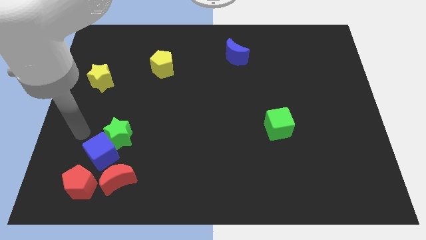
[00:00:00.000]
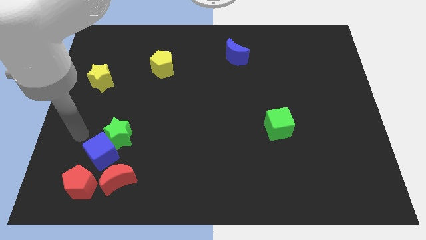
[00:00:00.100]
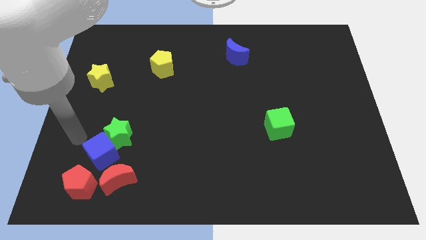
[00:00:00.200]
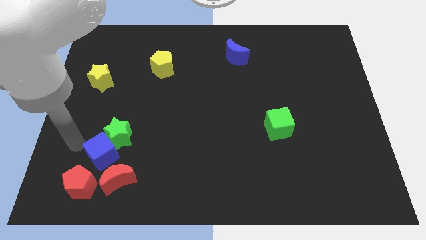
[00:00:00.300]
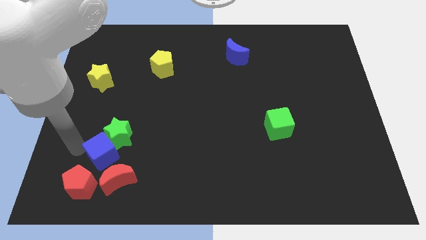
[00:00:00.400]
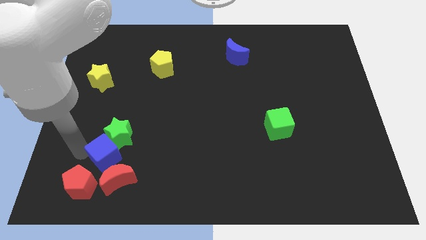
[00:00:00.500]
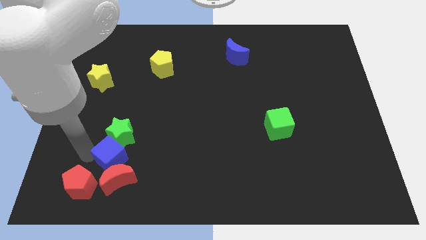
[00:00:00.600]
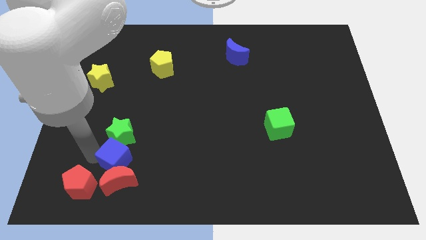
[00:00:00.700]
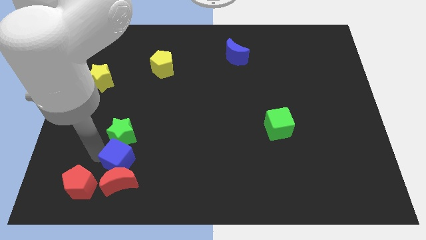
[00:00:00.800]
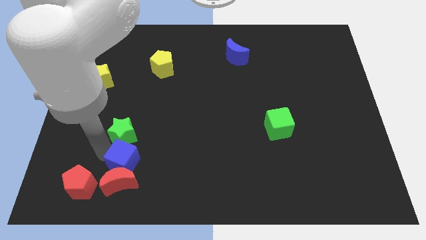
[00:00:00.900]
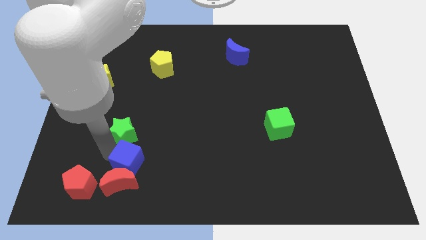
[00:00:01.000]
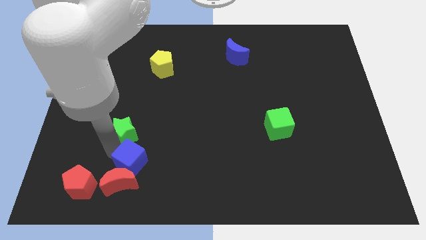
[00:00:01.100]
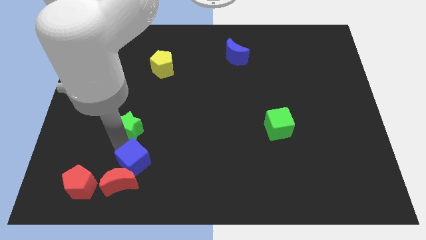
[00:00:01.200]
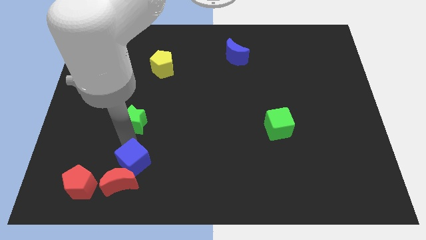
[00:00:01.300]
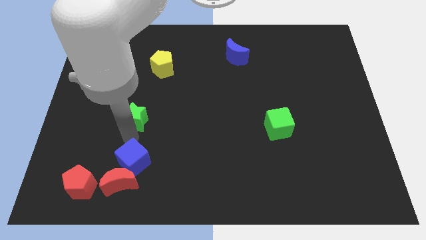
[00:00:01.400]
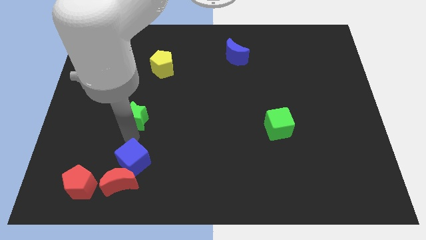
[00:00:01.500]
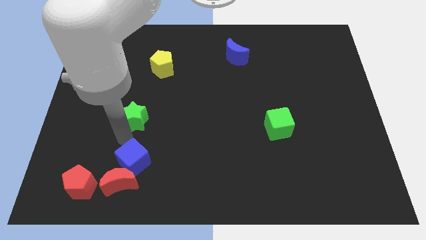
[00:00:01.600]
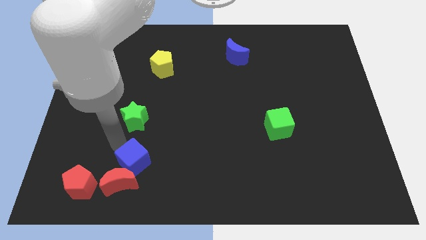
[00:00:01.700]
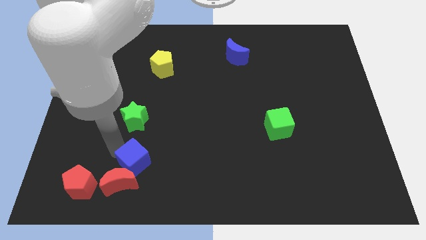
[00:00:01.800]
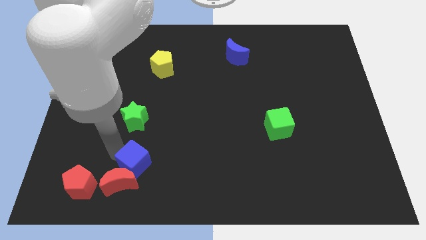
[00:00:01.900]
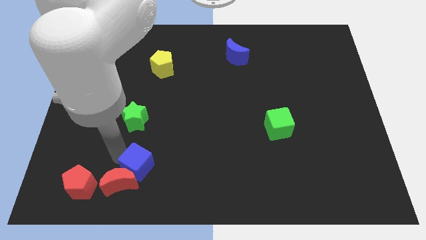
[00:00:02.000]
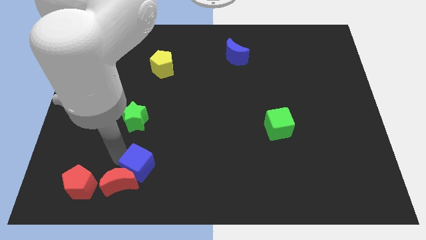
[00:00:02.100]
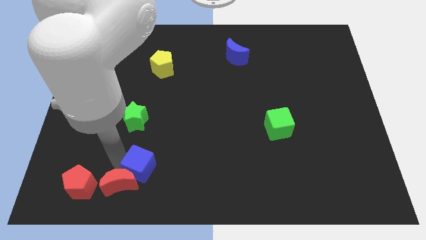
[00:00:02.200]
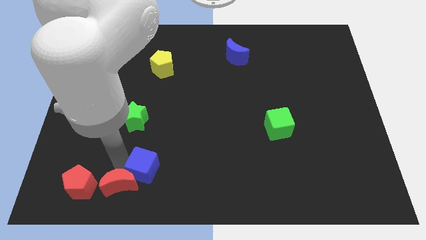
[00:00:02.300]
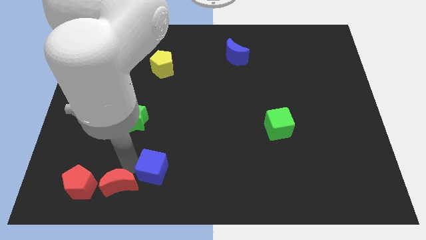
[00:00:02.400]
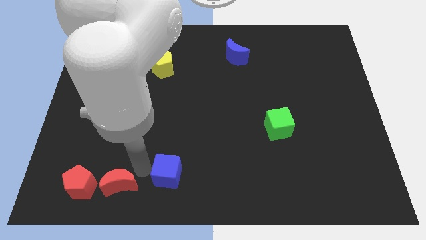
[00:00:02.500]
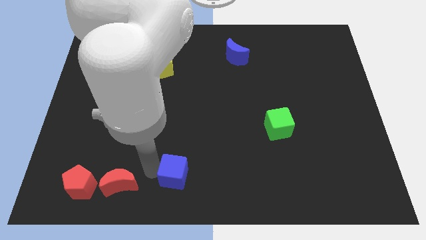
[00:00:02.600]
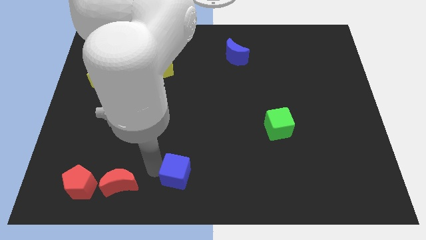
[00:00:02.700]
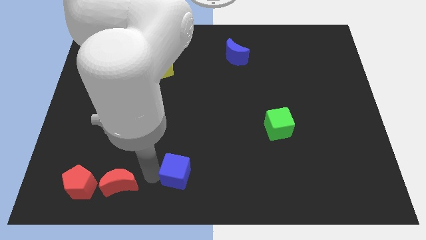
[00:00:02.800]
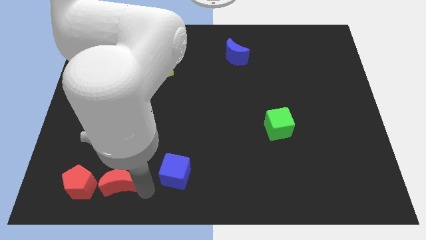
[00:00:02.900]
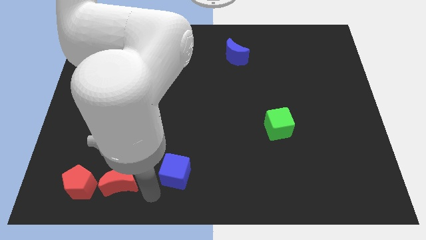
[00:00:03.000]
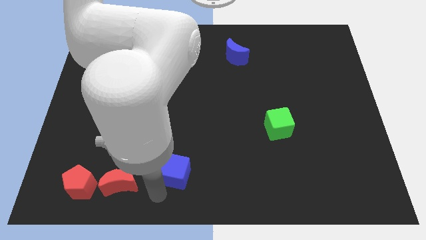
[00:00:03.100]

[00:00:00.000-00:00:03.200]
separate blue cube red moon and green star from each other

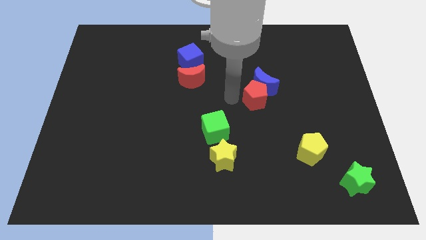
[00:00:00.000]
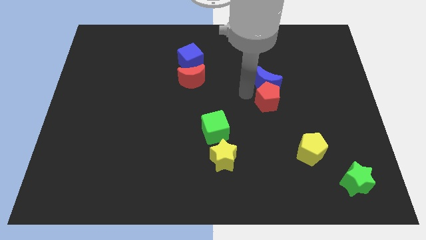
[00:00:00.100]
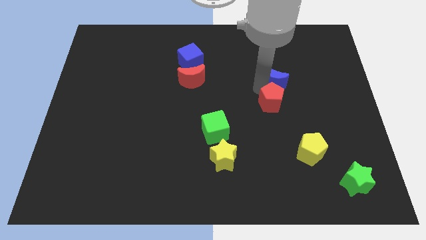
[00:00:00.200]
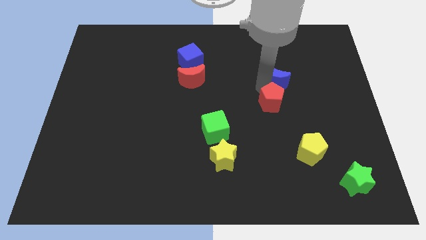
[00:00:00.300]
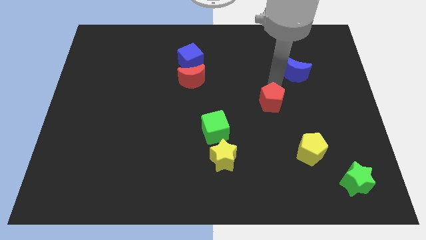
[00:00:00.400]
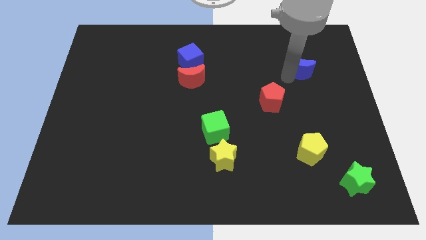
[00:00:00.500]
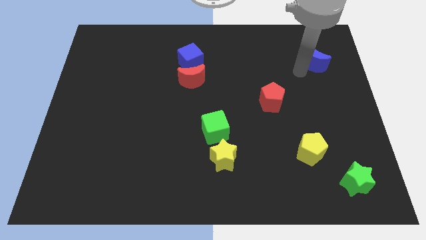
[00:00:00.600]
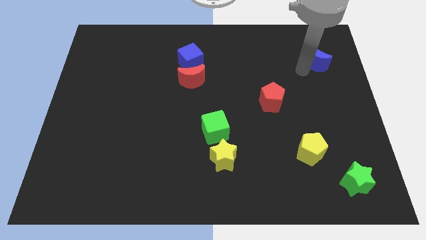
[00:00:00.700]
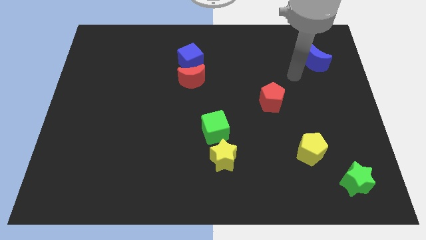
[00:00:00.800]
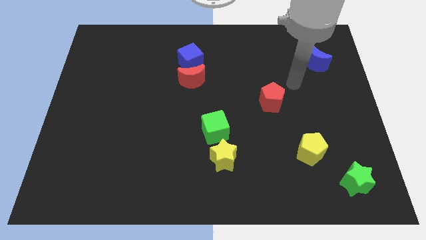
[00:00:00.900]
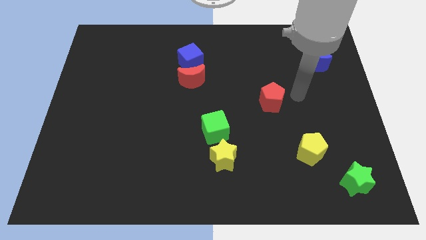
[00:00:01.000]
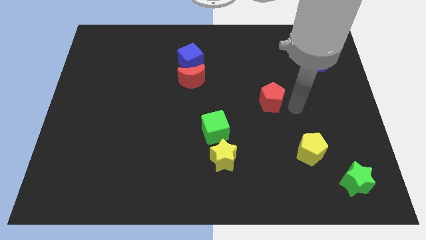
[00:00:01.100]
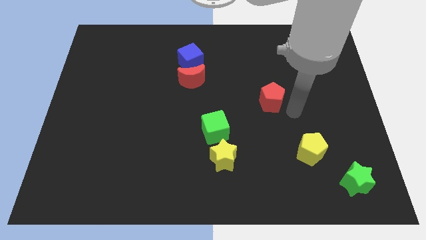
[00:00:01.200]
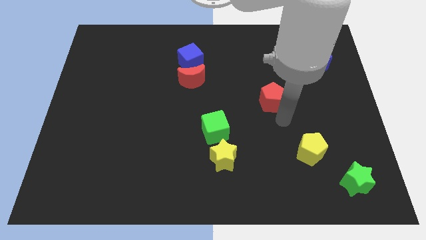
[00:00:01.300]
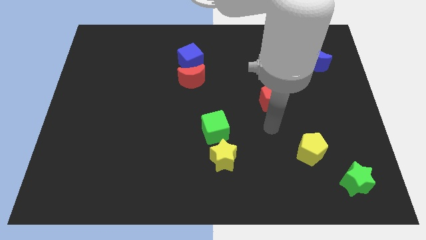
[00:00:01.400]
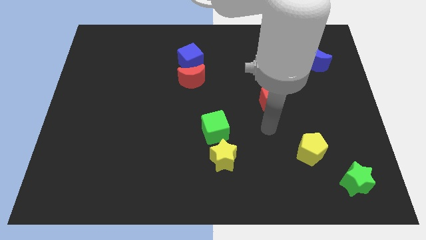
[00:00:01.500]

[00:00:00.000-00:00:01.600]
separate the blue crescent and the red pentagon

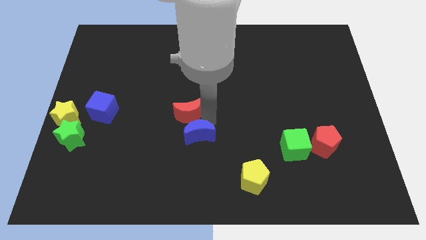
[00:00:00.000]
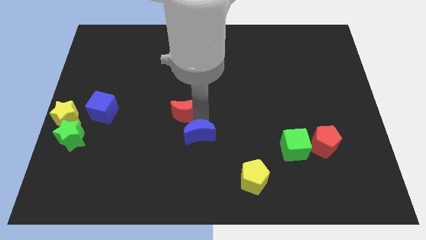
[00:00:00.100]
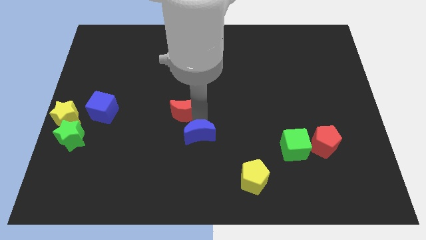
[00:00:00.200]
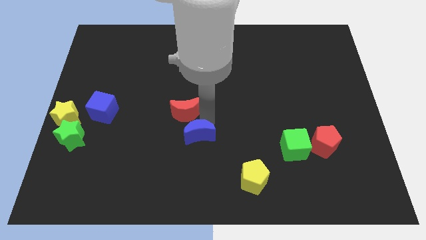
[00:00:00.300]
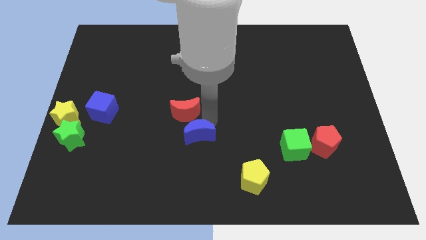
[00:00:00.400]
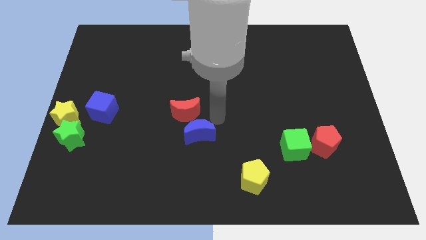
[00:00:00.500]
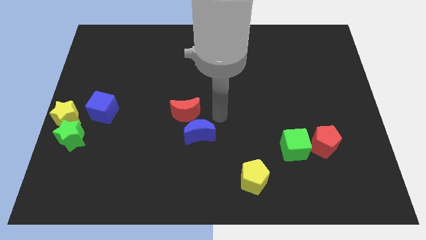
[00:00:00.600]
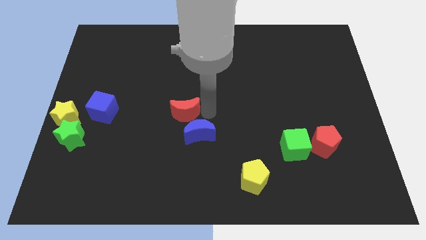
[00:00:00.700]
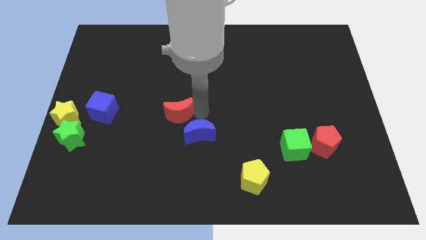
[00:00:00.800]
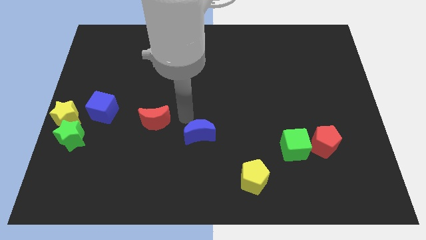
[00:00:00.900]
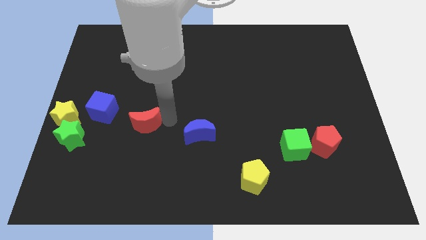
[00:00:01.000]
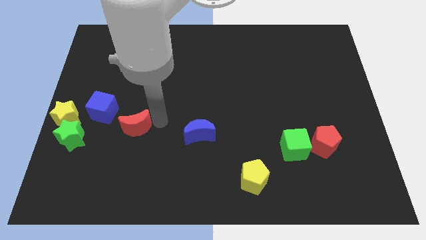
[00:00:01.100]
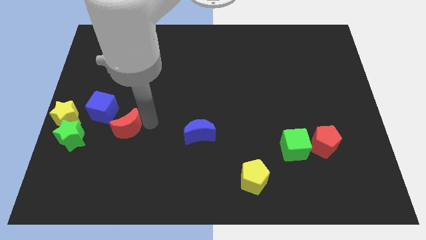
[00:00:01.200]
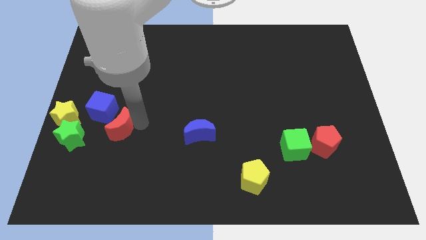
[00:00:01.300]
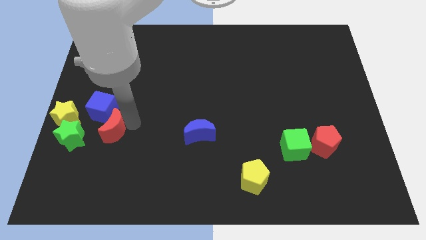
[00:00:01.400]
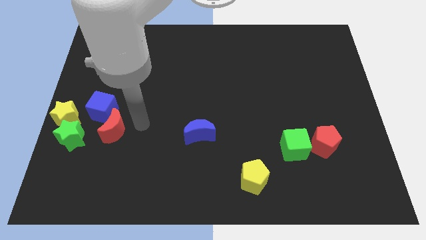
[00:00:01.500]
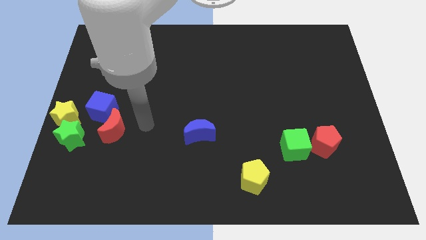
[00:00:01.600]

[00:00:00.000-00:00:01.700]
put the red crescent close to the blue cube

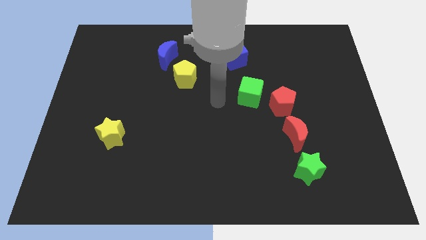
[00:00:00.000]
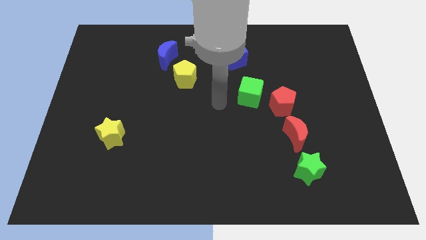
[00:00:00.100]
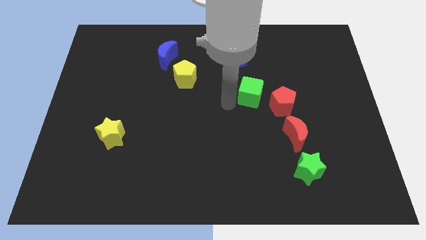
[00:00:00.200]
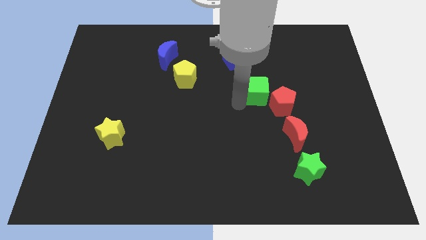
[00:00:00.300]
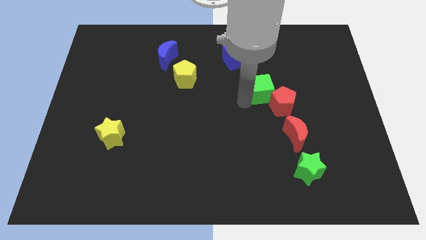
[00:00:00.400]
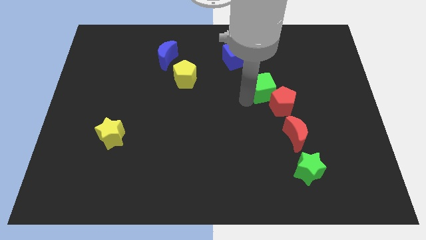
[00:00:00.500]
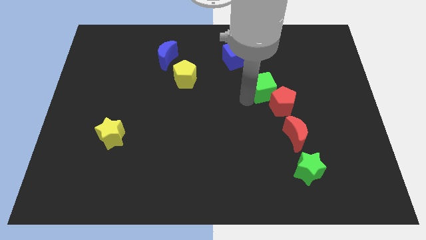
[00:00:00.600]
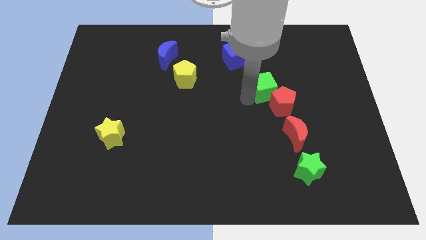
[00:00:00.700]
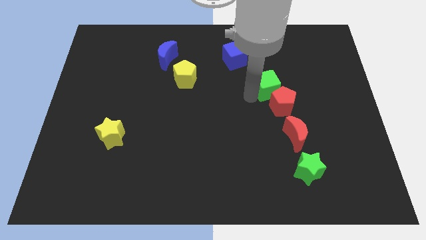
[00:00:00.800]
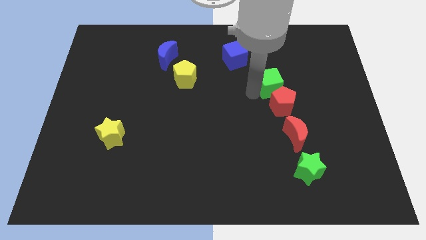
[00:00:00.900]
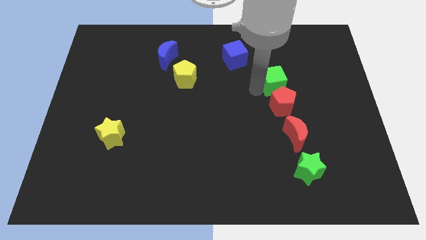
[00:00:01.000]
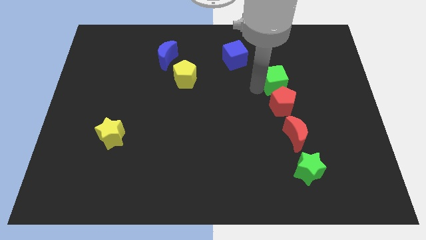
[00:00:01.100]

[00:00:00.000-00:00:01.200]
place the green cube above the red pentagon

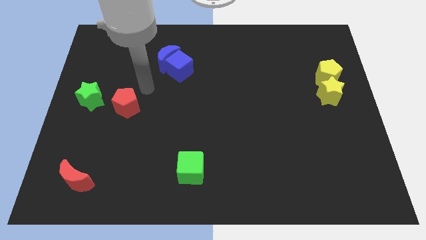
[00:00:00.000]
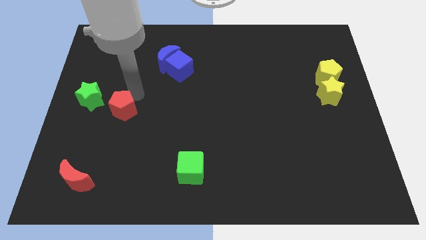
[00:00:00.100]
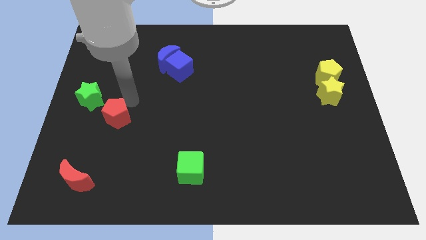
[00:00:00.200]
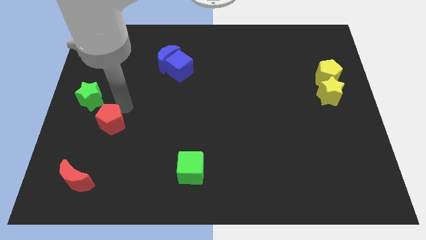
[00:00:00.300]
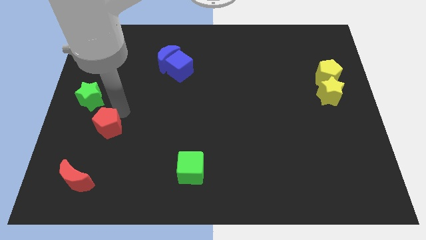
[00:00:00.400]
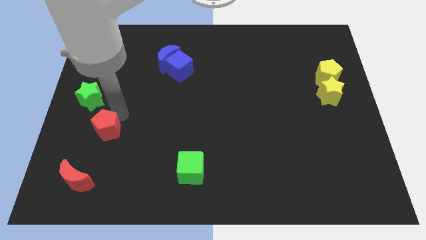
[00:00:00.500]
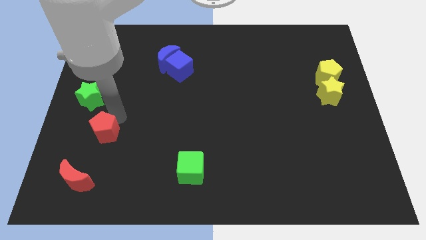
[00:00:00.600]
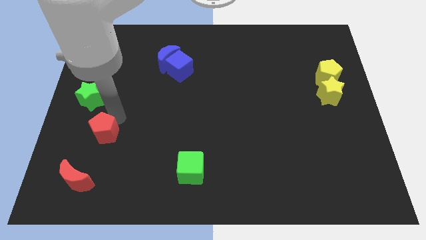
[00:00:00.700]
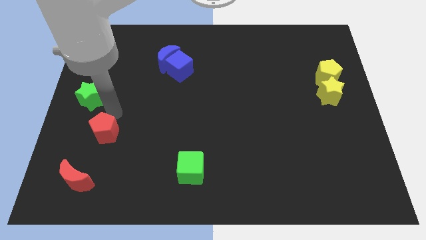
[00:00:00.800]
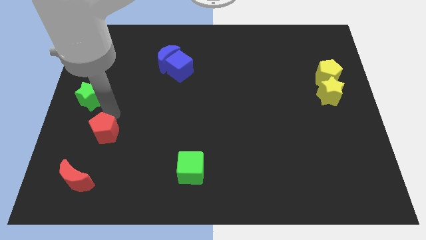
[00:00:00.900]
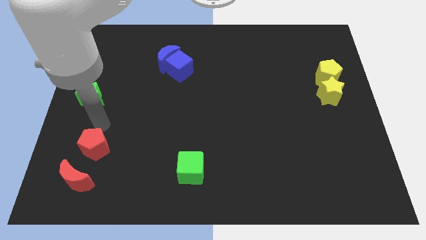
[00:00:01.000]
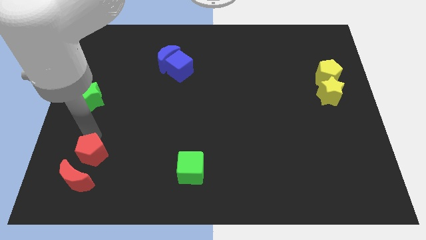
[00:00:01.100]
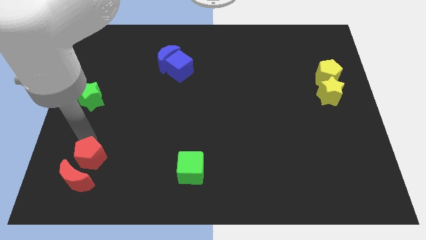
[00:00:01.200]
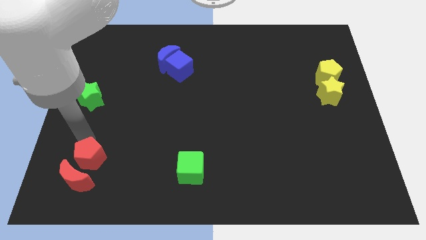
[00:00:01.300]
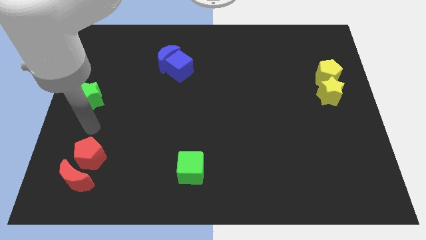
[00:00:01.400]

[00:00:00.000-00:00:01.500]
move the red pentagon to the top of the red crescent
